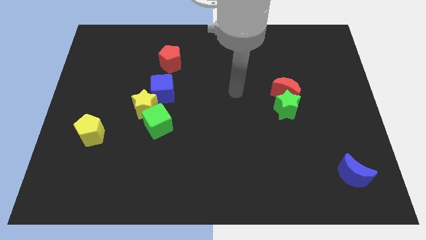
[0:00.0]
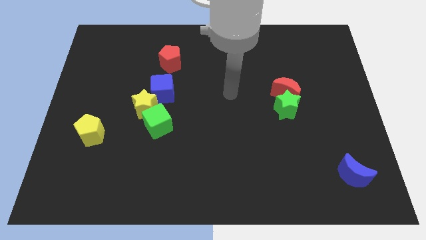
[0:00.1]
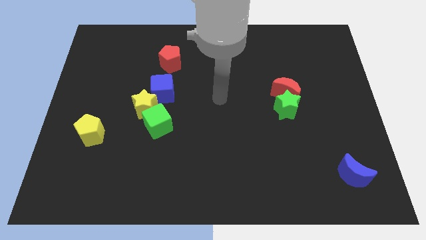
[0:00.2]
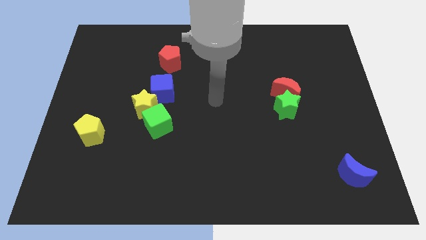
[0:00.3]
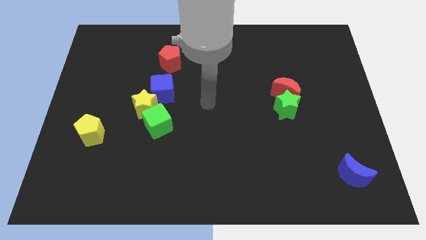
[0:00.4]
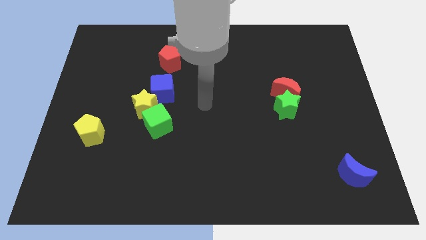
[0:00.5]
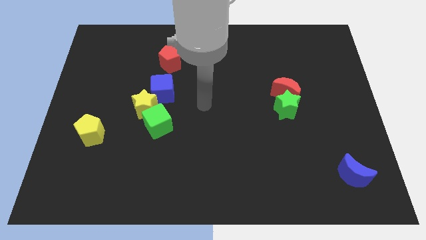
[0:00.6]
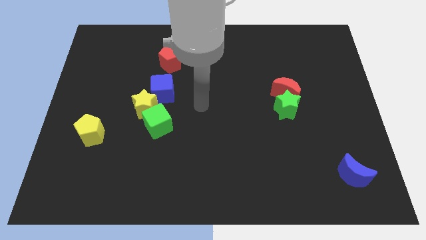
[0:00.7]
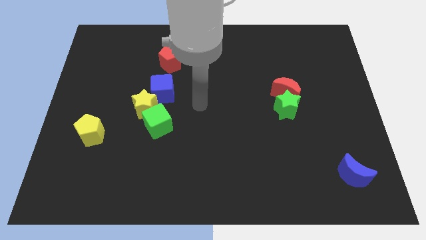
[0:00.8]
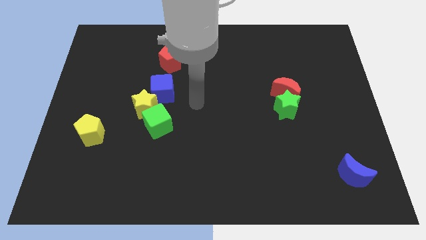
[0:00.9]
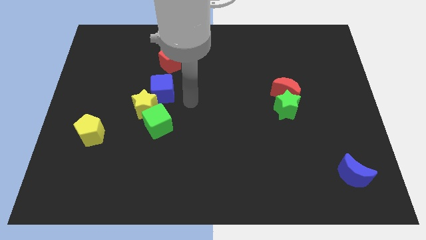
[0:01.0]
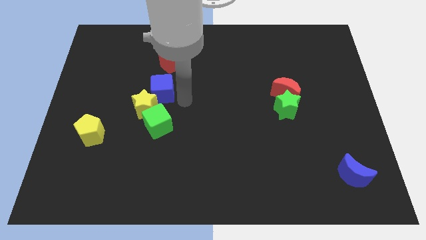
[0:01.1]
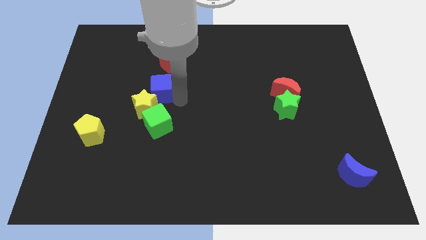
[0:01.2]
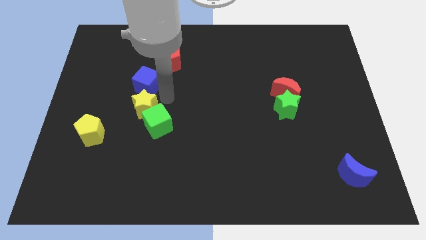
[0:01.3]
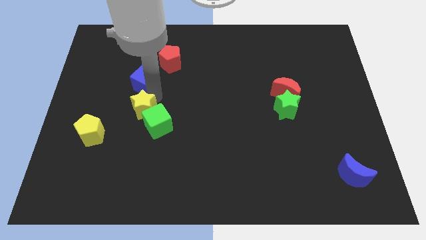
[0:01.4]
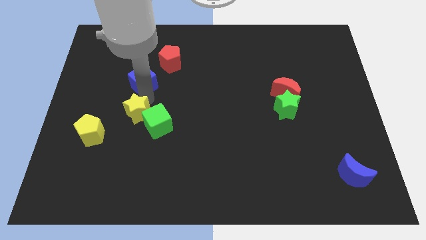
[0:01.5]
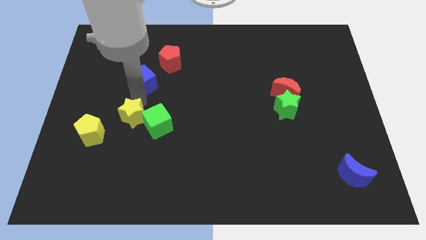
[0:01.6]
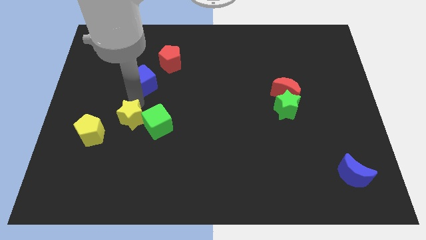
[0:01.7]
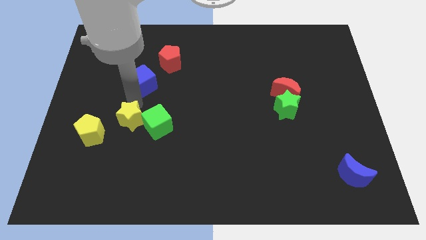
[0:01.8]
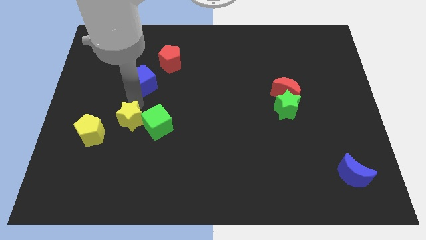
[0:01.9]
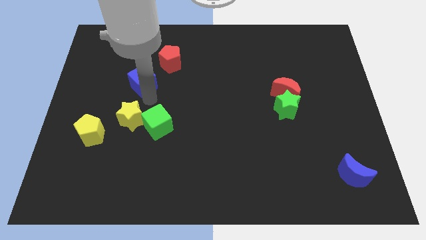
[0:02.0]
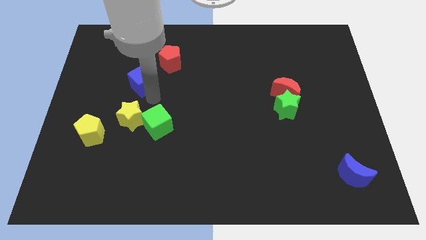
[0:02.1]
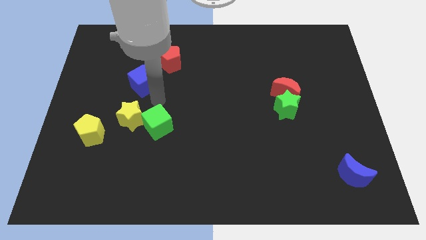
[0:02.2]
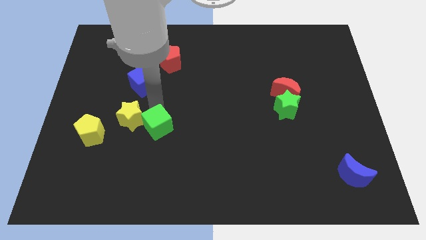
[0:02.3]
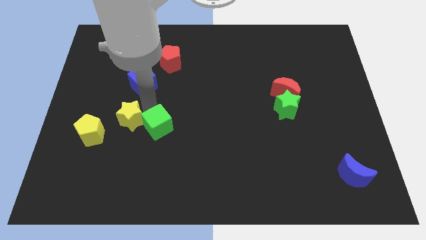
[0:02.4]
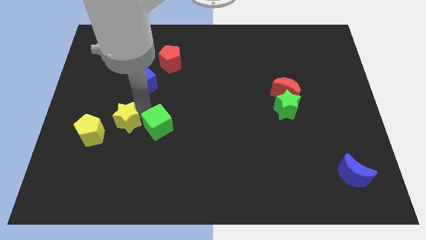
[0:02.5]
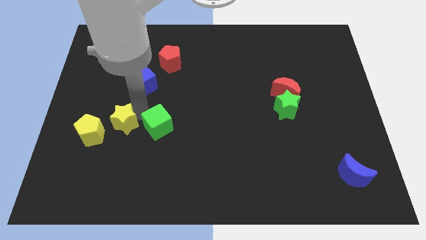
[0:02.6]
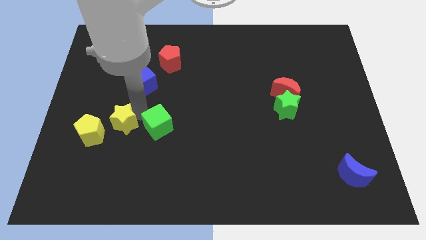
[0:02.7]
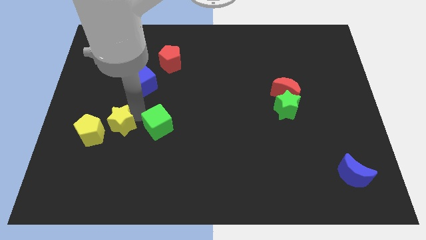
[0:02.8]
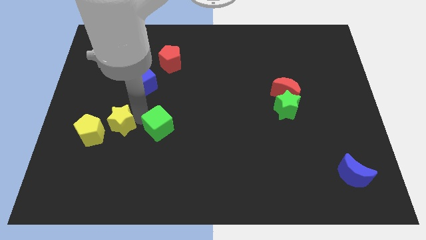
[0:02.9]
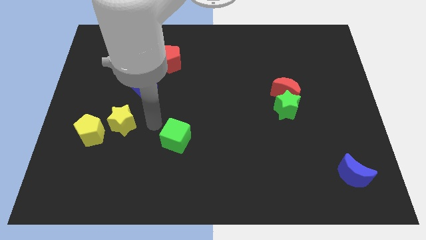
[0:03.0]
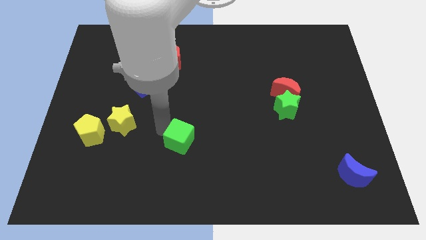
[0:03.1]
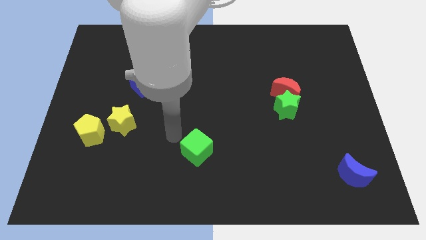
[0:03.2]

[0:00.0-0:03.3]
separate the green cube from the yellow star

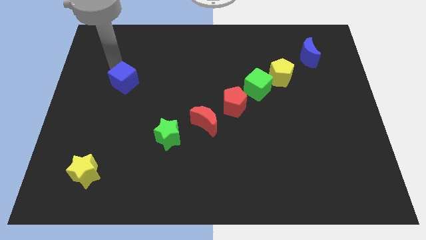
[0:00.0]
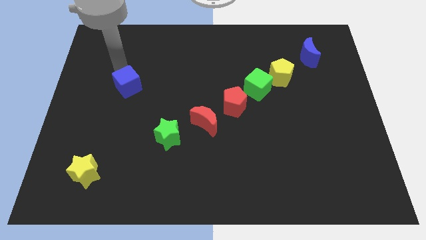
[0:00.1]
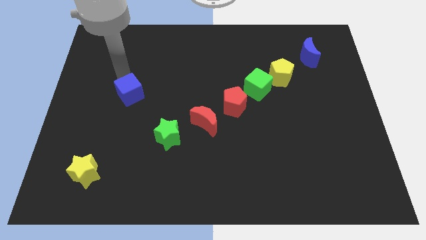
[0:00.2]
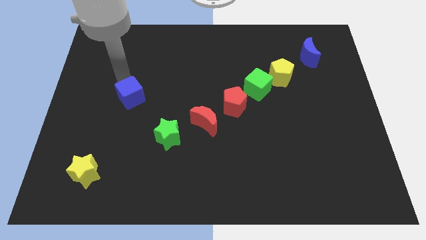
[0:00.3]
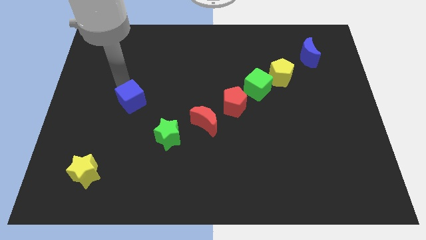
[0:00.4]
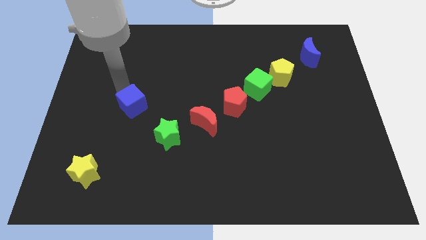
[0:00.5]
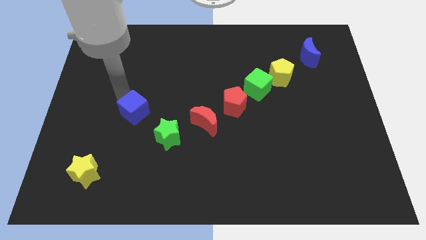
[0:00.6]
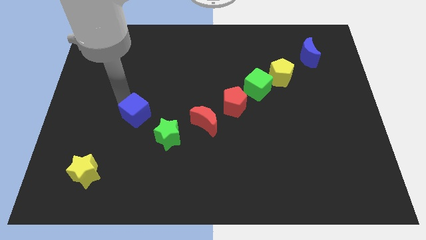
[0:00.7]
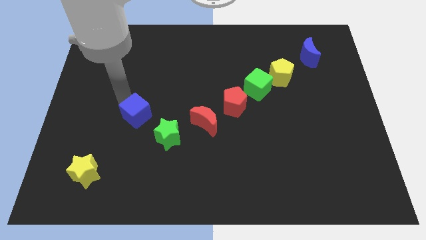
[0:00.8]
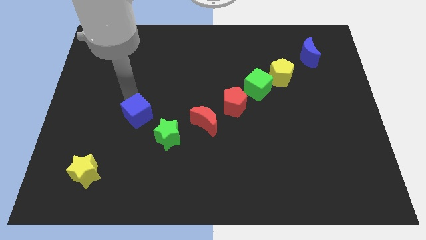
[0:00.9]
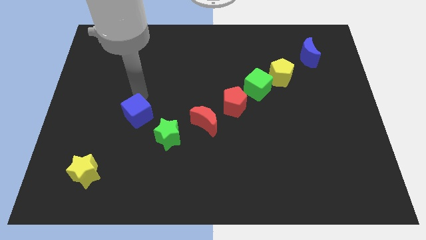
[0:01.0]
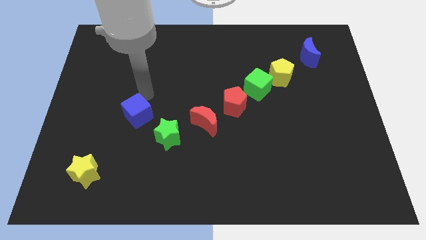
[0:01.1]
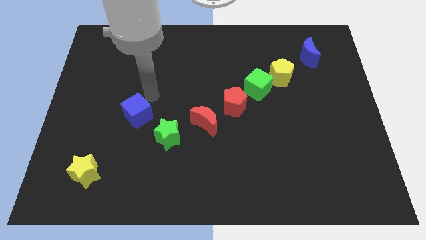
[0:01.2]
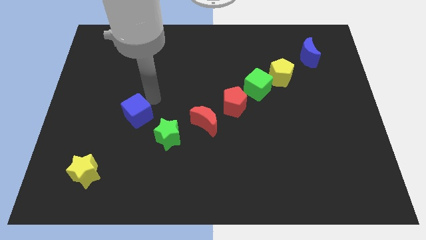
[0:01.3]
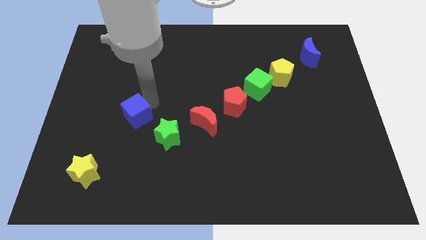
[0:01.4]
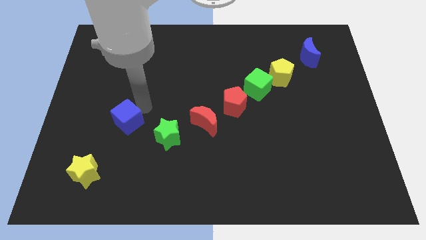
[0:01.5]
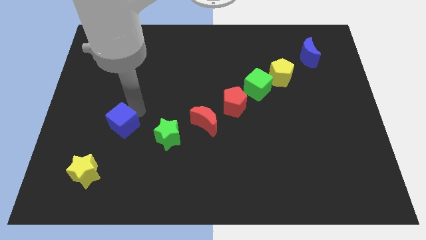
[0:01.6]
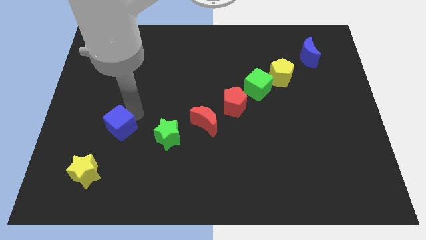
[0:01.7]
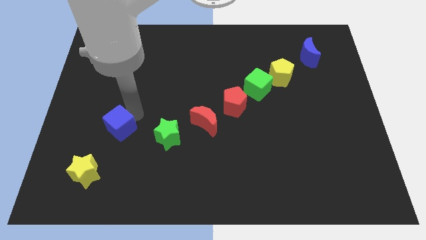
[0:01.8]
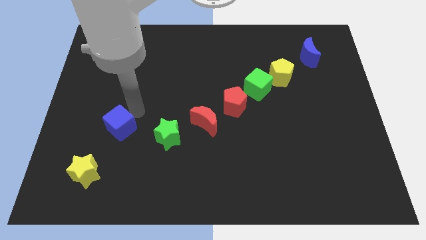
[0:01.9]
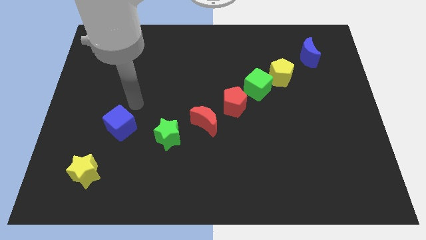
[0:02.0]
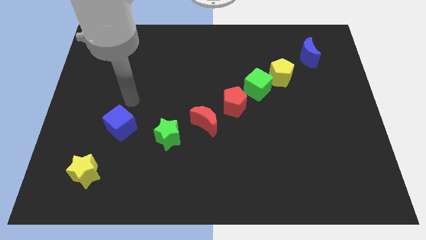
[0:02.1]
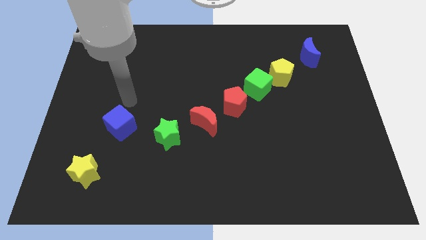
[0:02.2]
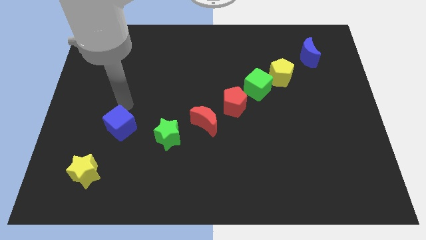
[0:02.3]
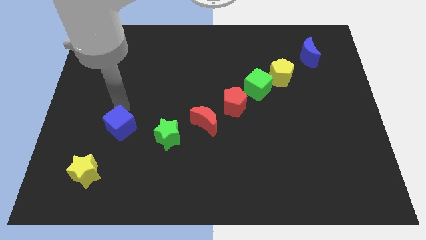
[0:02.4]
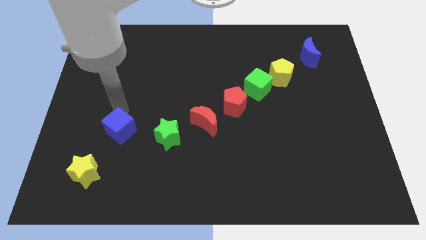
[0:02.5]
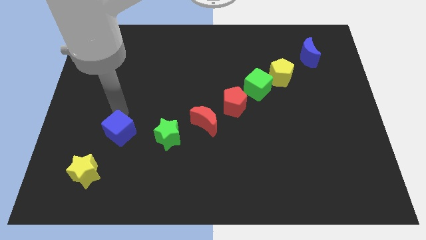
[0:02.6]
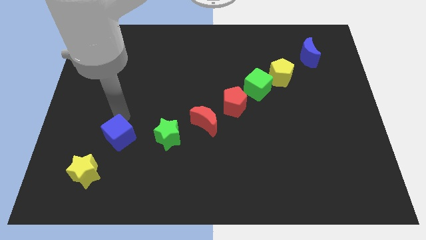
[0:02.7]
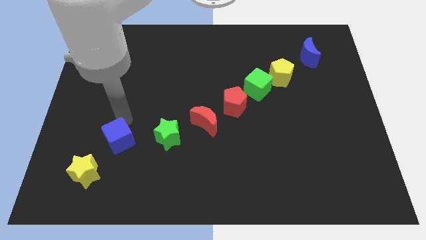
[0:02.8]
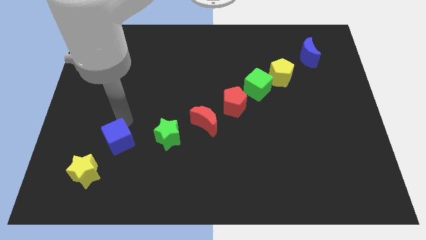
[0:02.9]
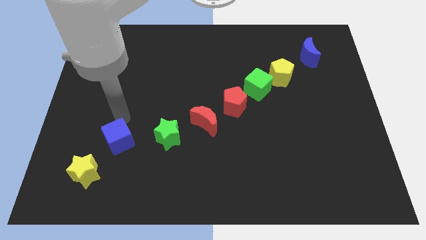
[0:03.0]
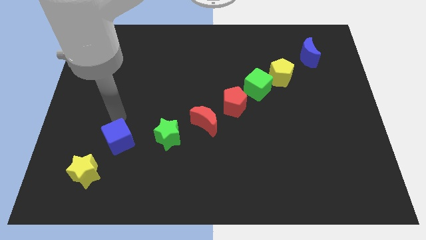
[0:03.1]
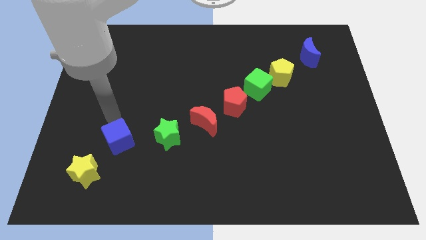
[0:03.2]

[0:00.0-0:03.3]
drag the blue cube slightly downwards

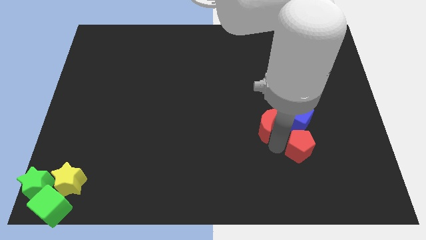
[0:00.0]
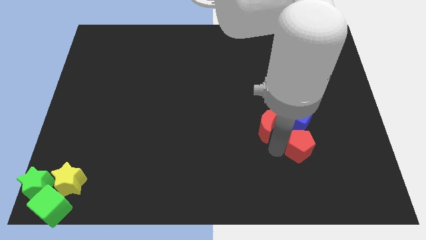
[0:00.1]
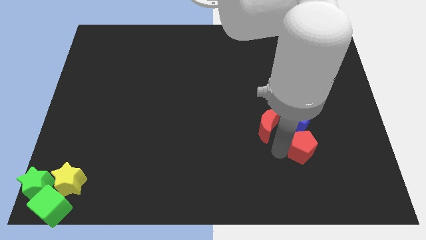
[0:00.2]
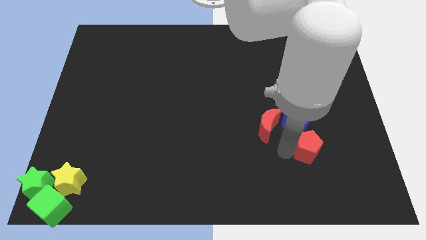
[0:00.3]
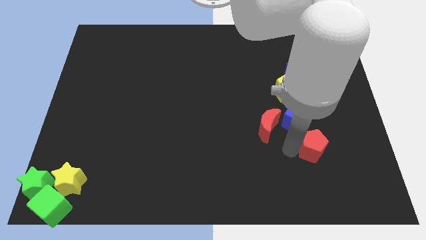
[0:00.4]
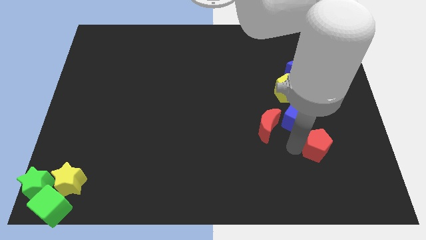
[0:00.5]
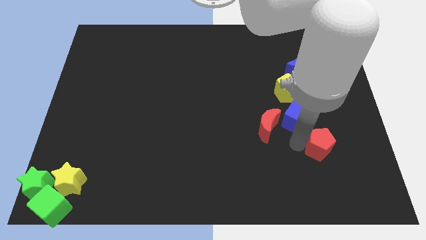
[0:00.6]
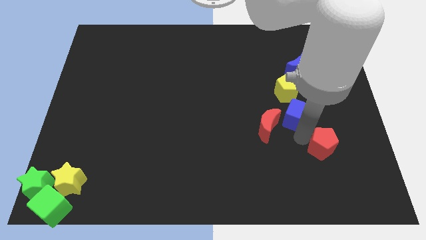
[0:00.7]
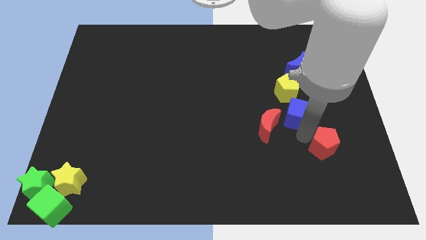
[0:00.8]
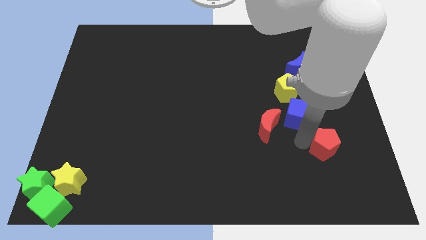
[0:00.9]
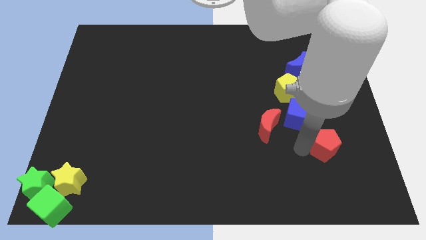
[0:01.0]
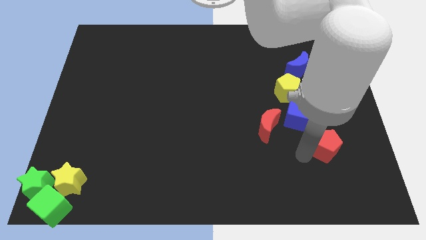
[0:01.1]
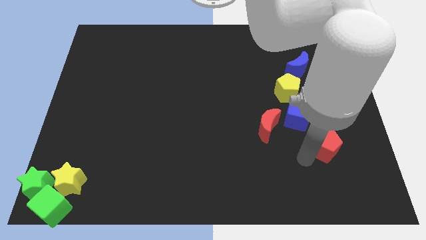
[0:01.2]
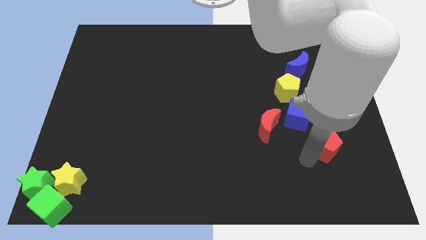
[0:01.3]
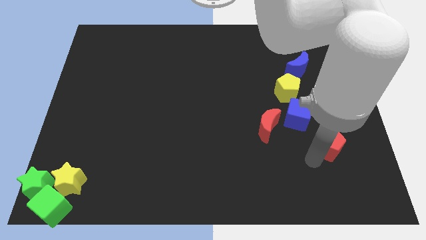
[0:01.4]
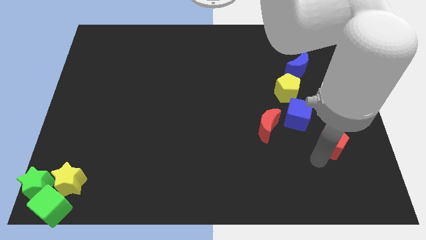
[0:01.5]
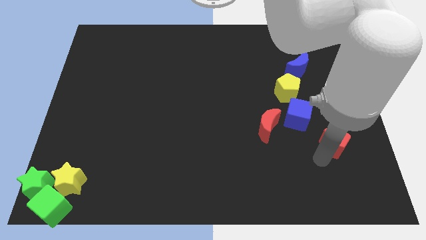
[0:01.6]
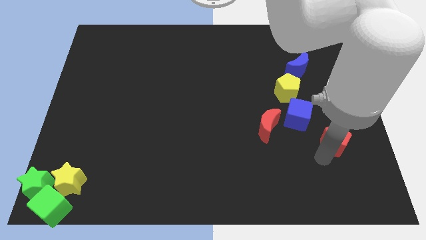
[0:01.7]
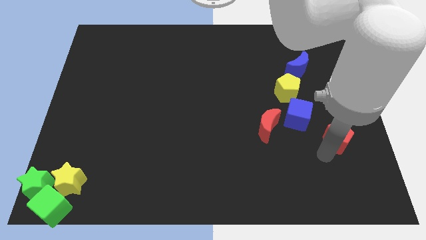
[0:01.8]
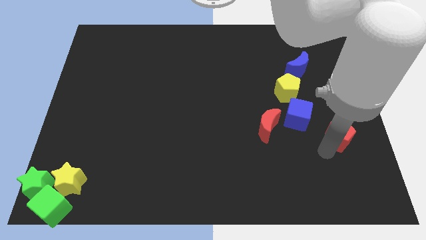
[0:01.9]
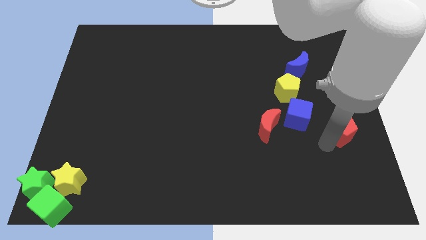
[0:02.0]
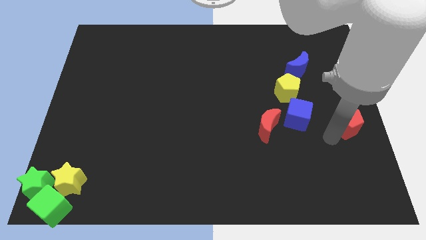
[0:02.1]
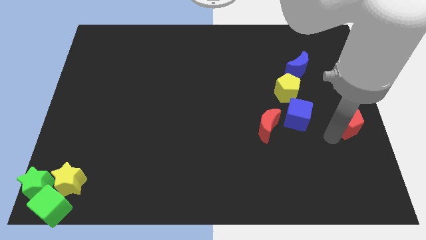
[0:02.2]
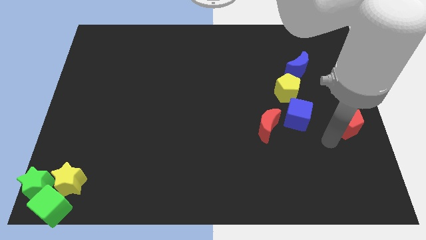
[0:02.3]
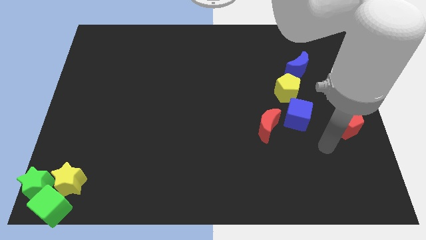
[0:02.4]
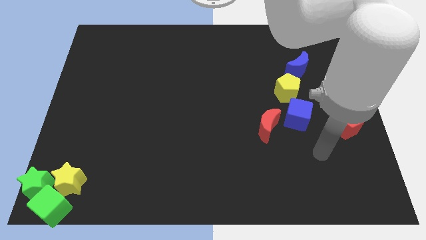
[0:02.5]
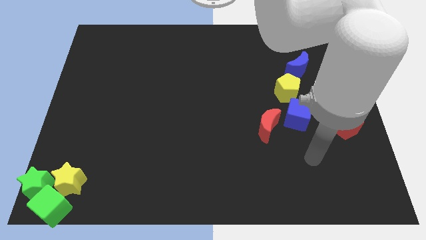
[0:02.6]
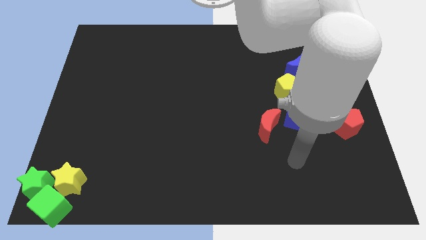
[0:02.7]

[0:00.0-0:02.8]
move the red pentagon right to the blue cube
